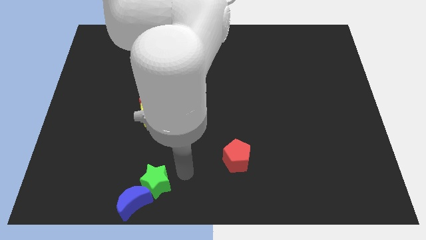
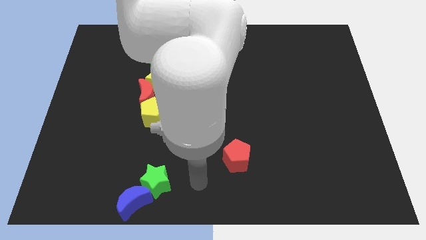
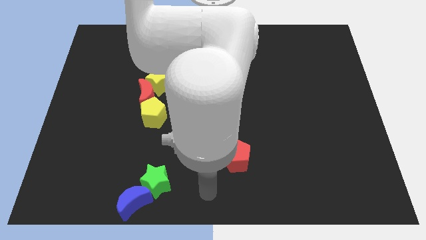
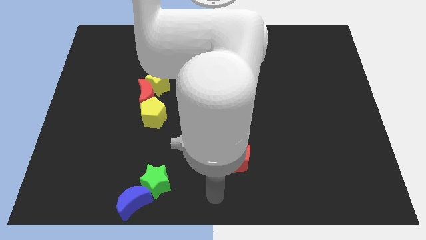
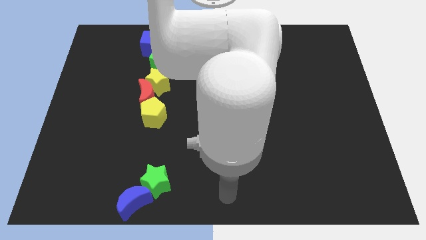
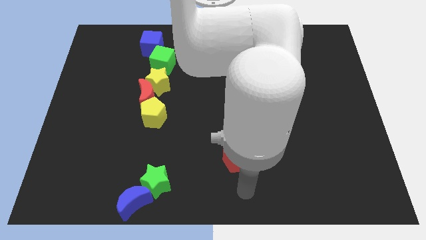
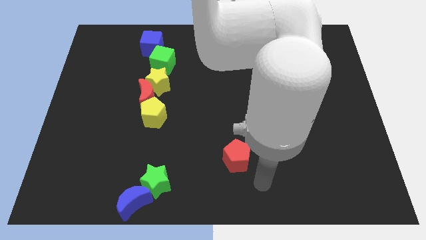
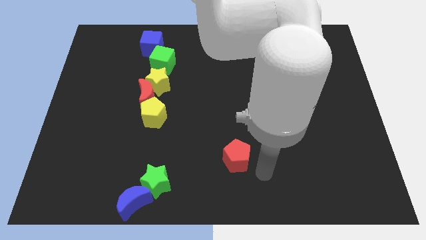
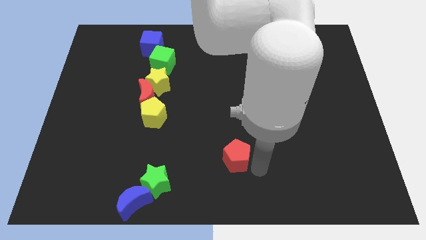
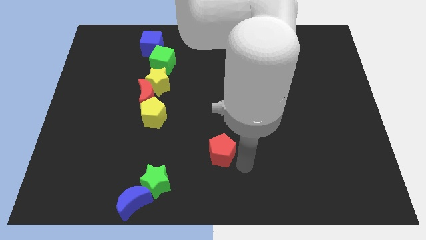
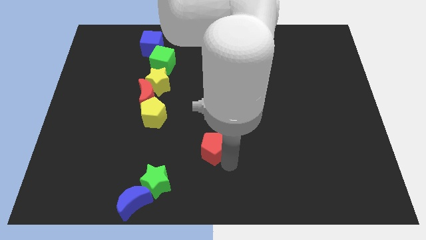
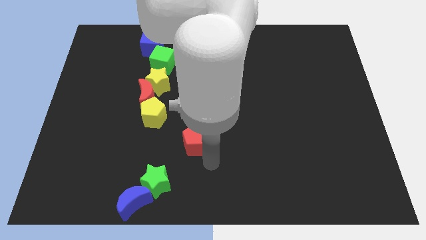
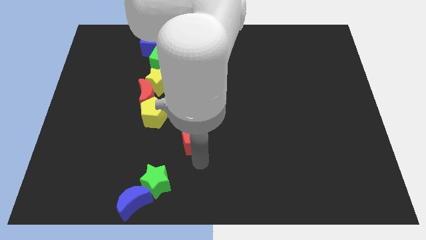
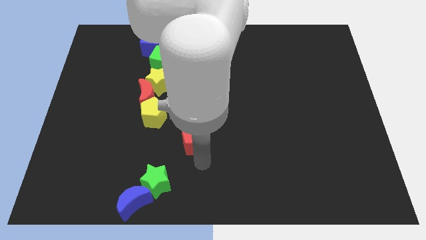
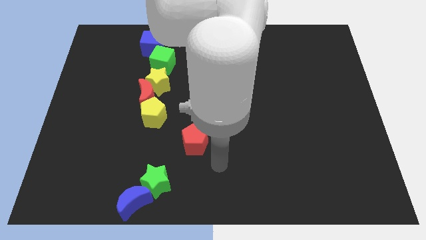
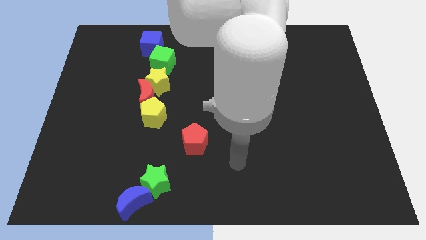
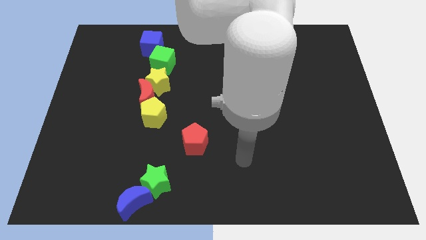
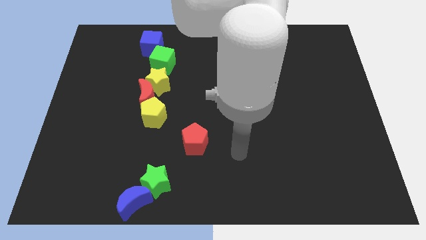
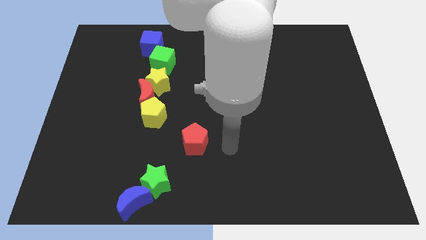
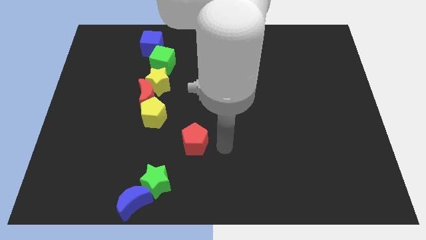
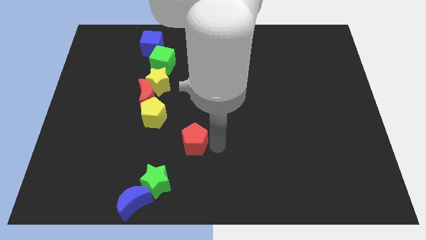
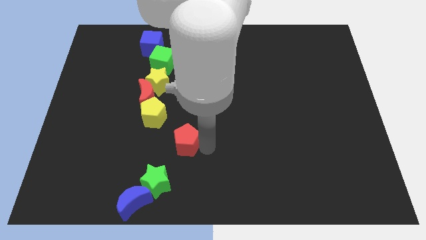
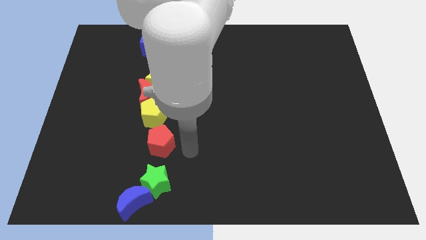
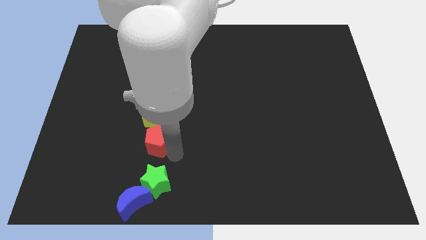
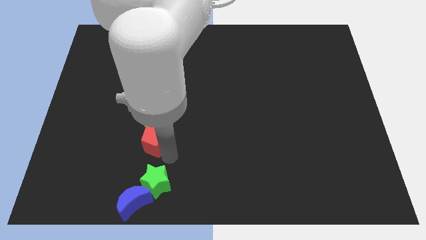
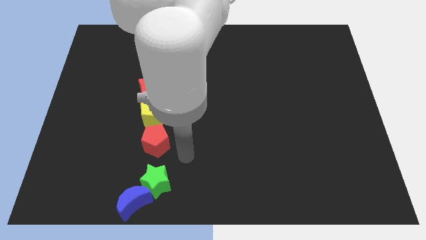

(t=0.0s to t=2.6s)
move the red pentagon to the bottom of the yellow pentagon

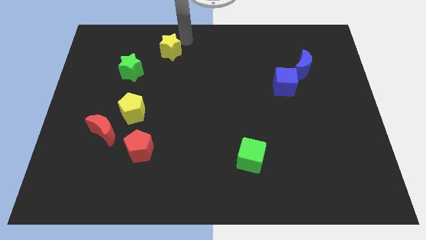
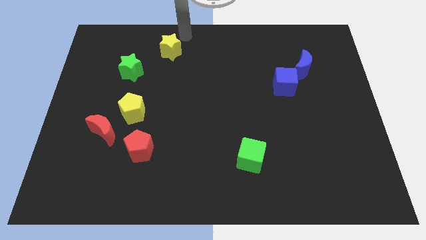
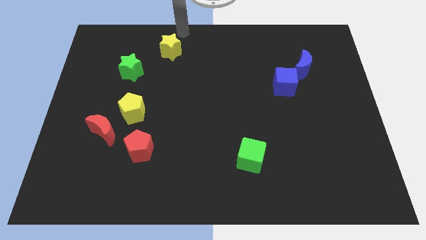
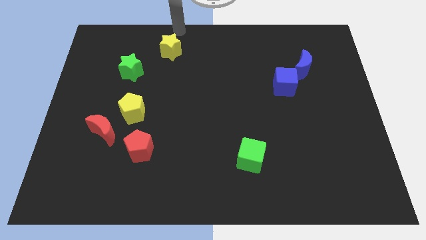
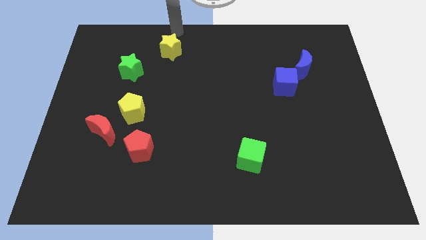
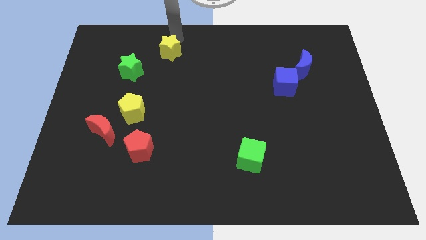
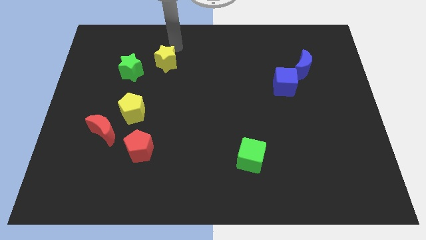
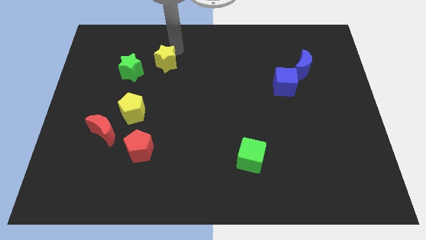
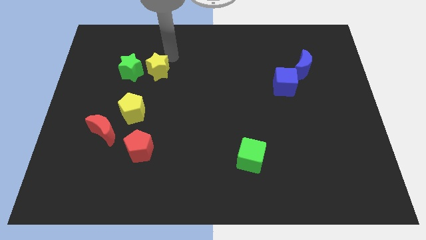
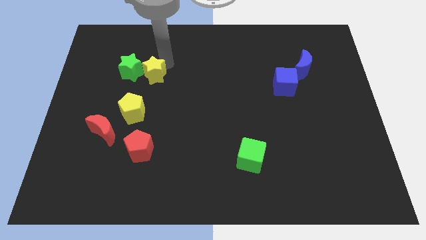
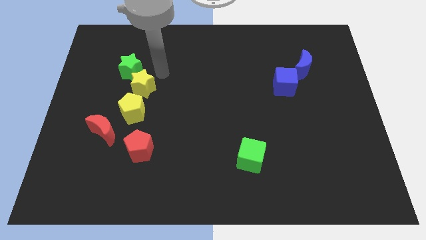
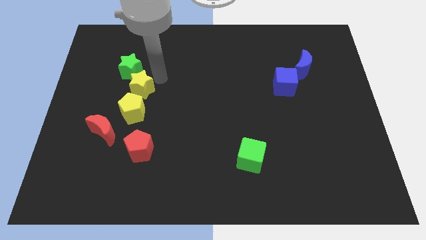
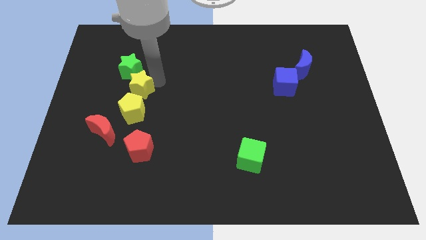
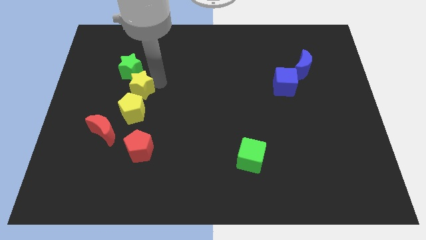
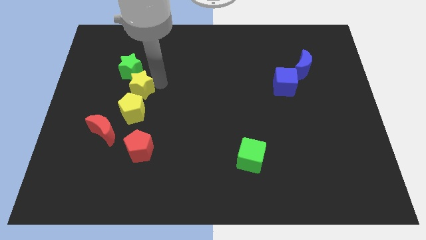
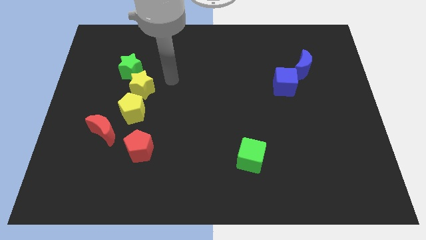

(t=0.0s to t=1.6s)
move the yellow star towards the yellow pentagon

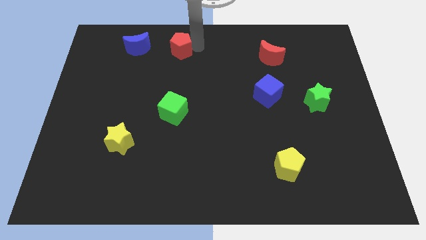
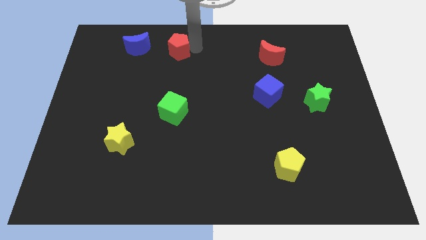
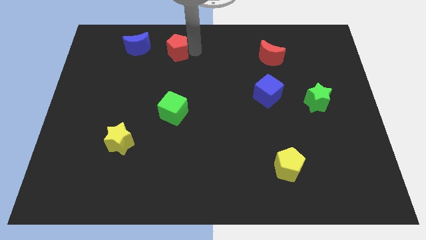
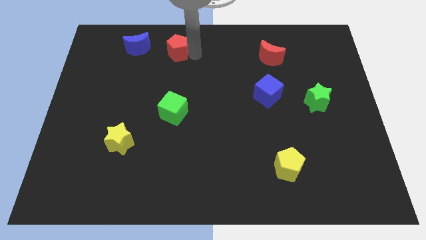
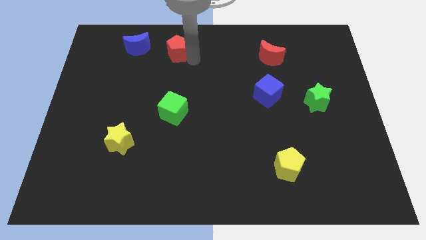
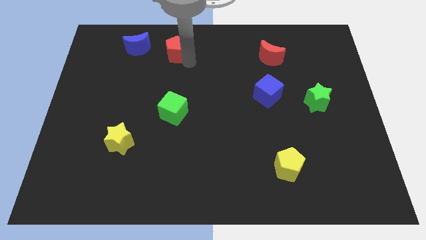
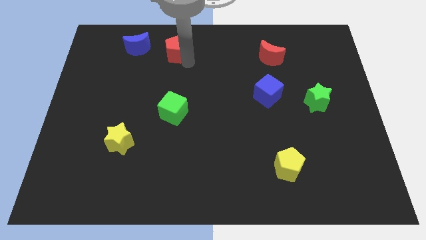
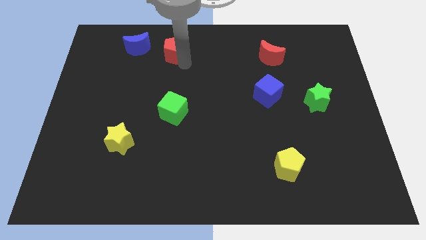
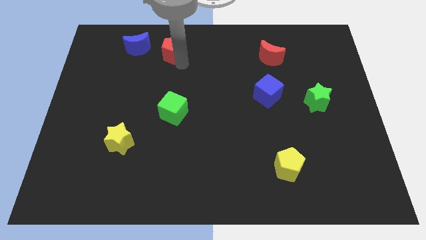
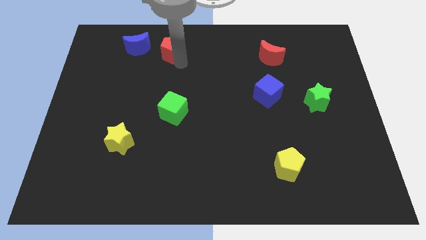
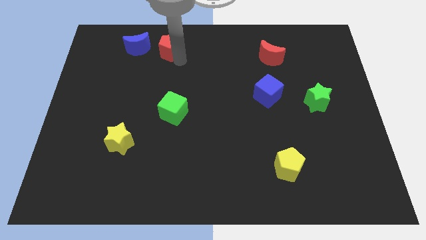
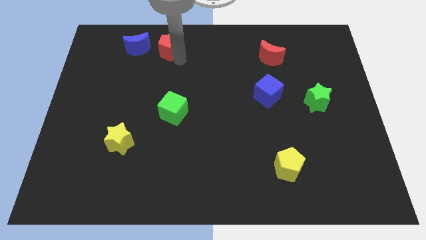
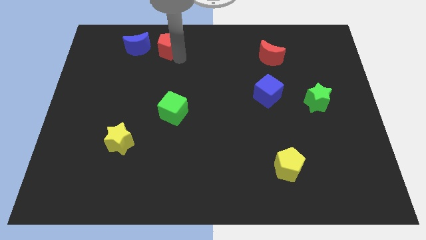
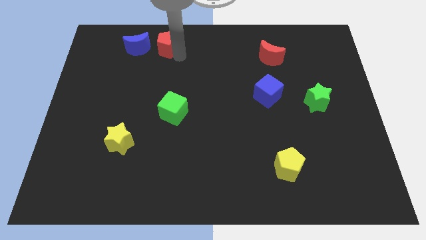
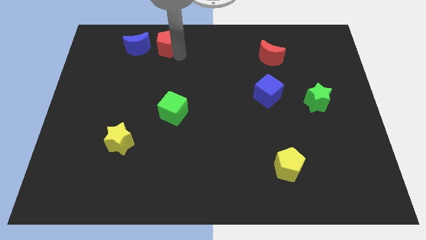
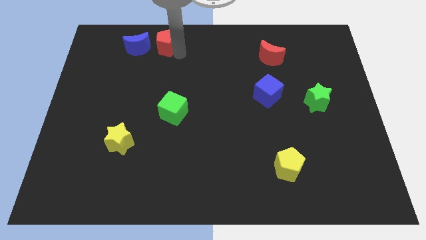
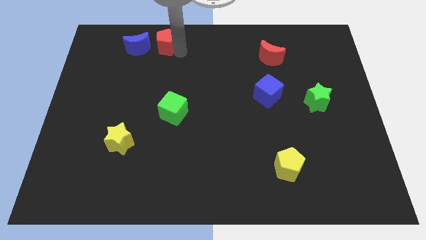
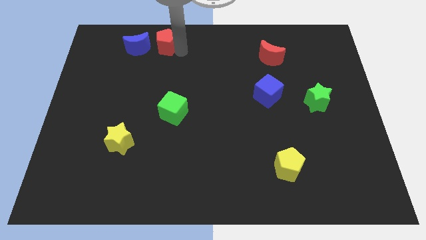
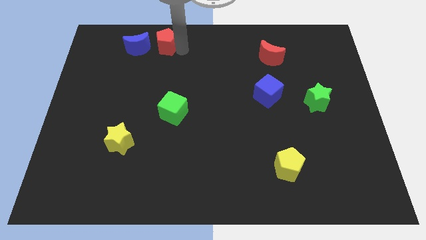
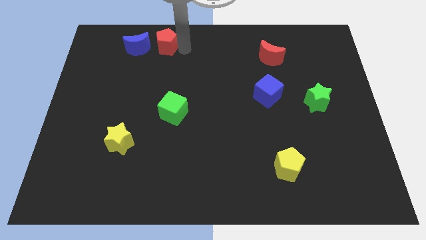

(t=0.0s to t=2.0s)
slightly move the red pentagon to the right of blue crescent

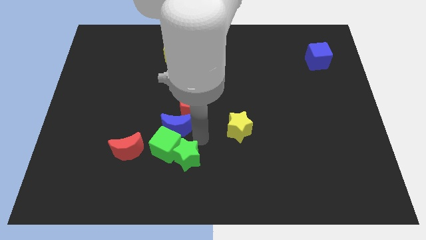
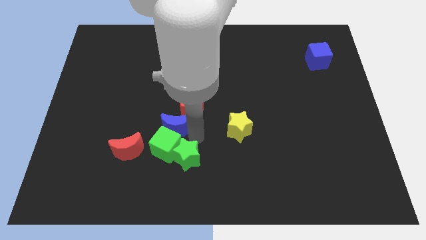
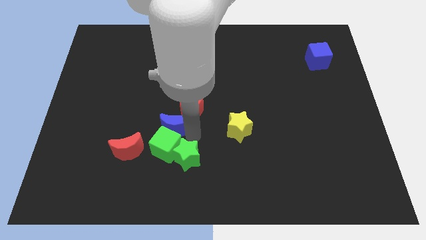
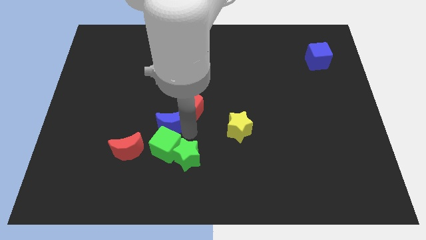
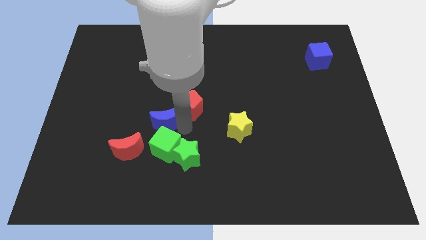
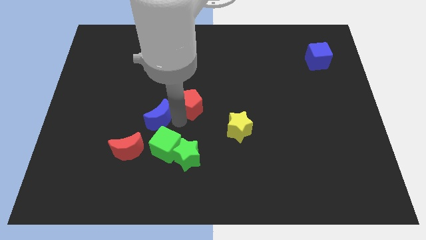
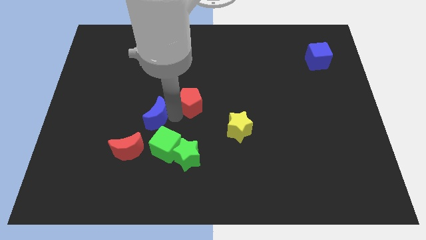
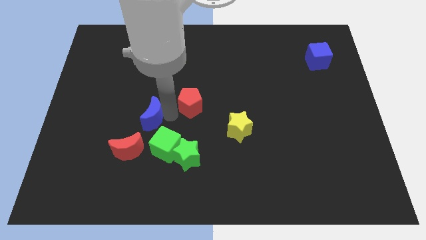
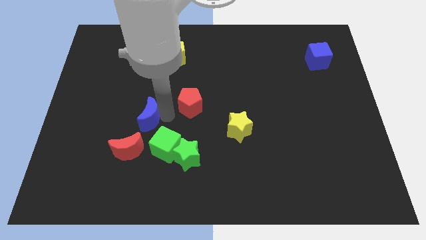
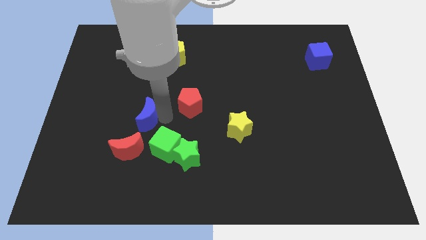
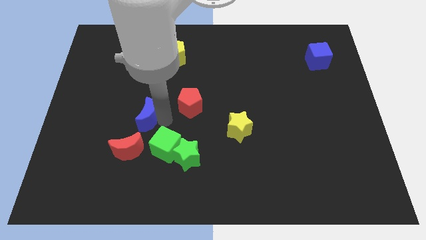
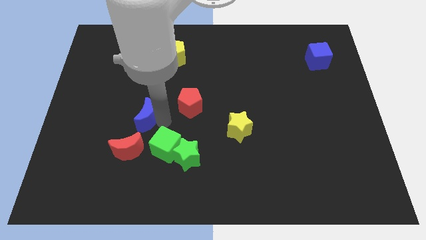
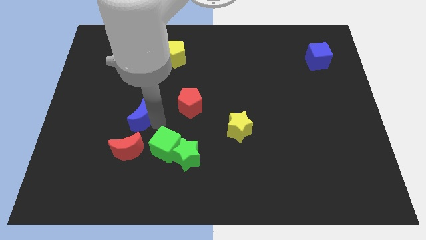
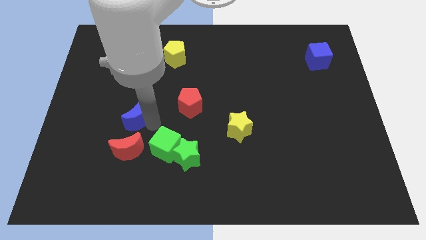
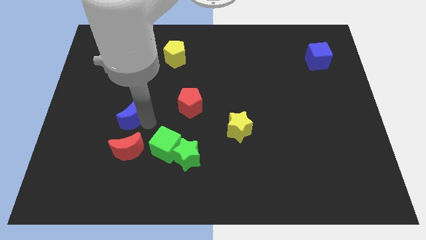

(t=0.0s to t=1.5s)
move the blue crescent to the top of the red crescent

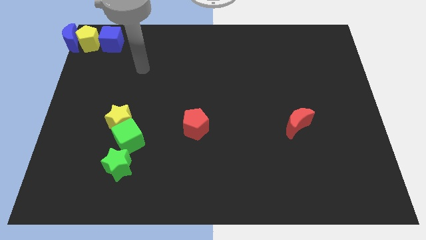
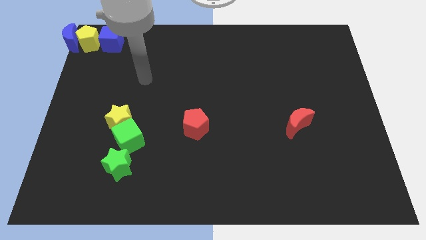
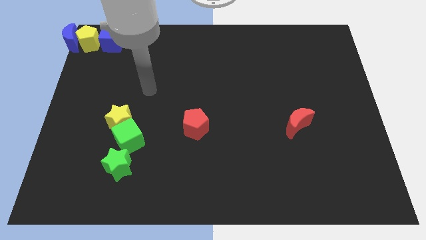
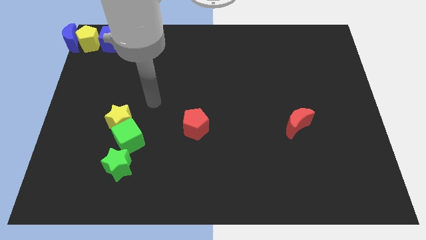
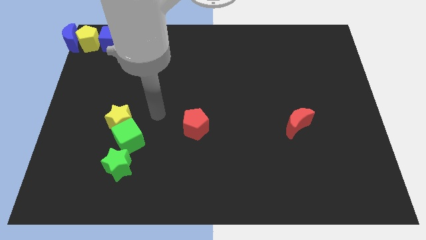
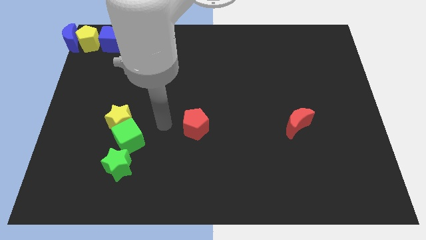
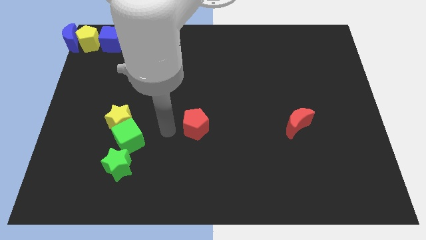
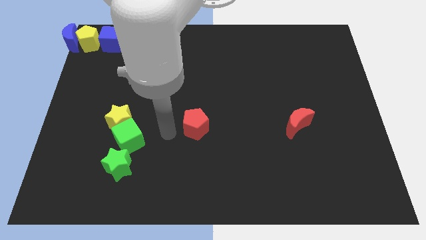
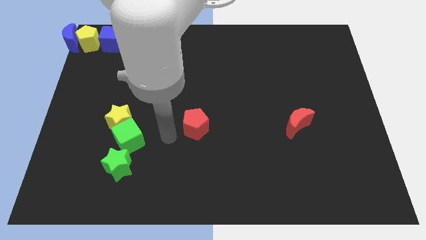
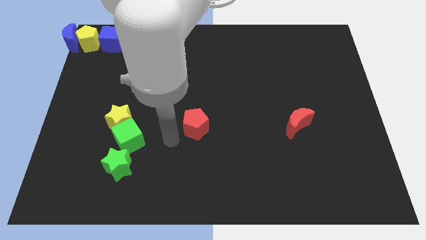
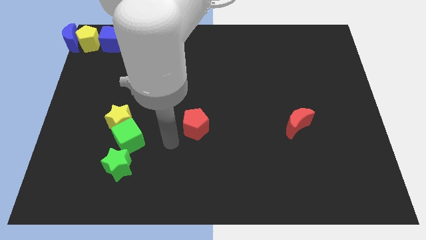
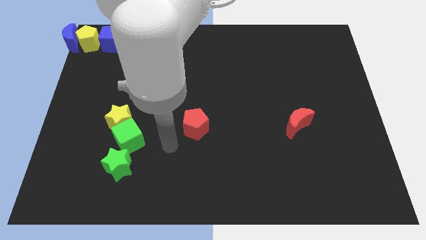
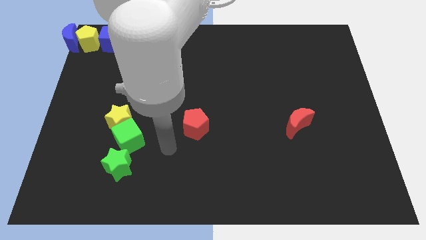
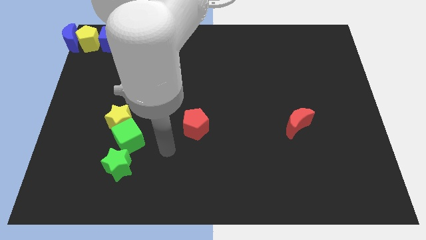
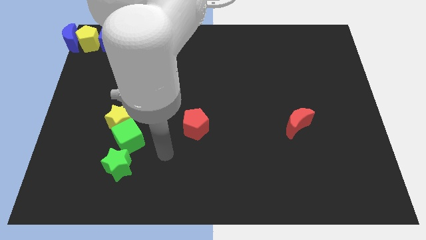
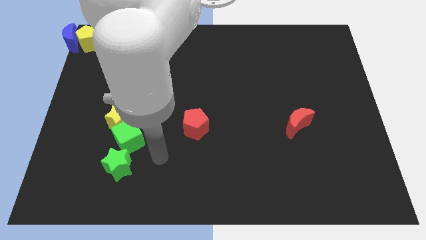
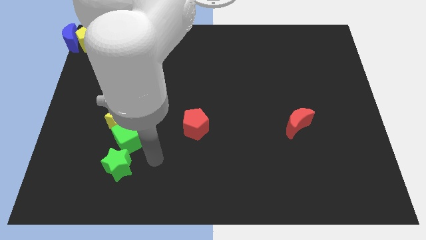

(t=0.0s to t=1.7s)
move your hand towards the bottom side
